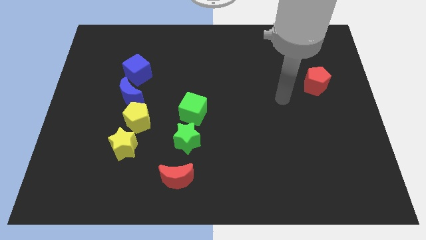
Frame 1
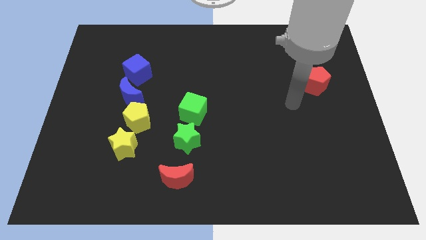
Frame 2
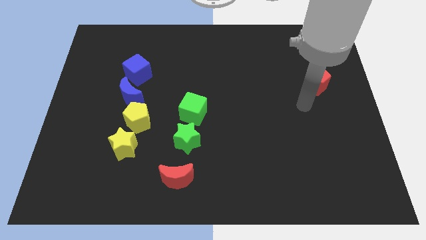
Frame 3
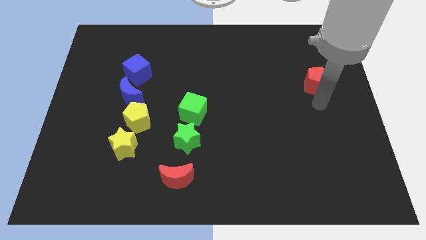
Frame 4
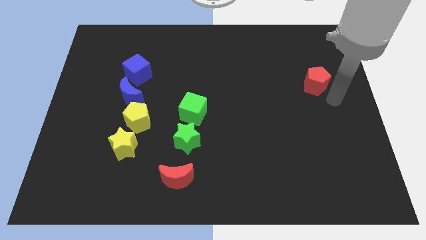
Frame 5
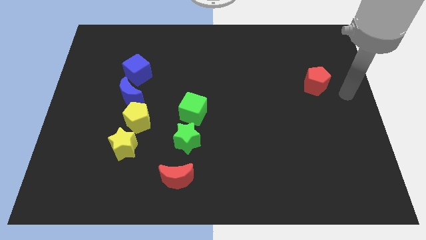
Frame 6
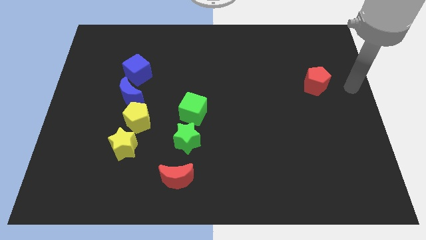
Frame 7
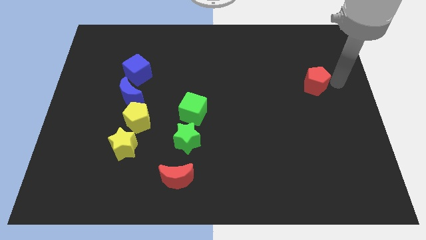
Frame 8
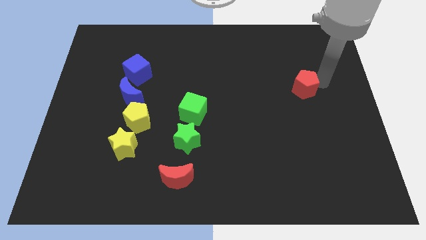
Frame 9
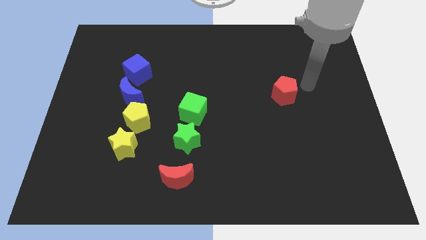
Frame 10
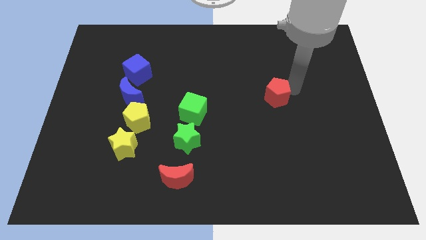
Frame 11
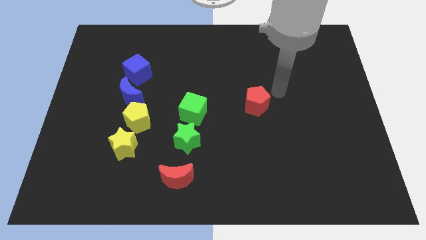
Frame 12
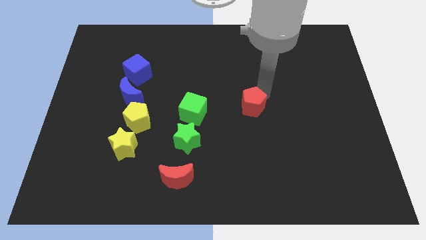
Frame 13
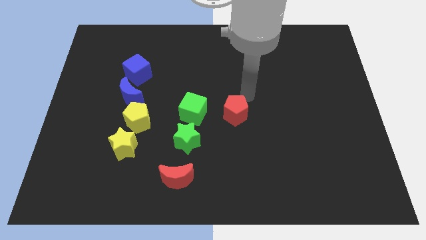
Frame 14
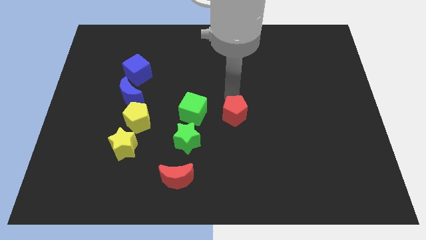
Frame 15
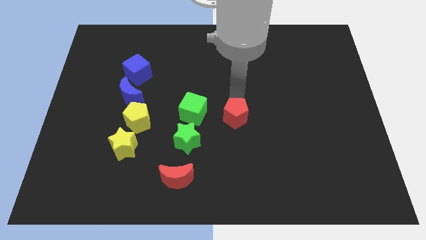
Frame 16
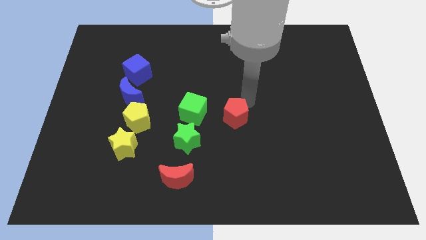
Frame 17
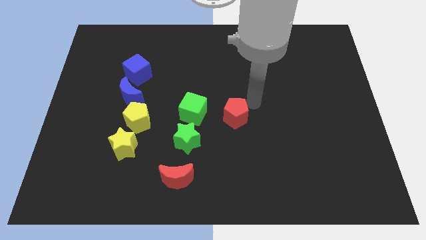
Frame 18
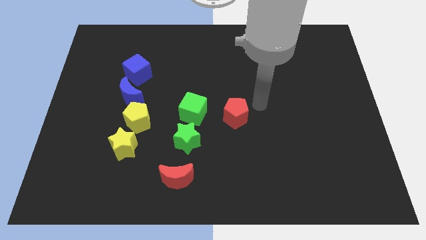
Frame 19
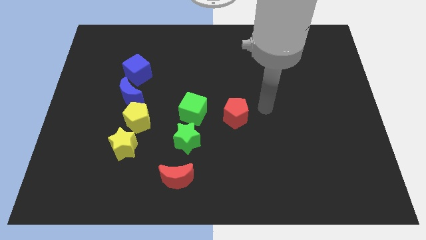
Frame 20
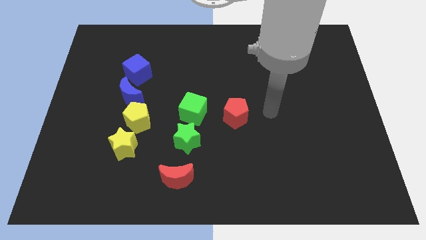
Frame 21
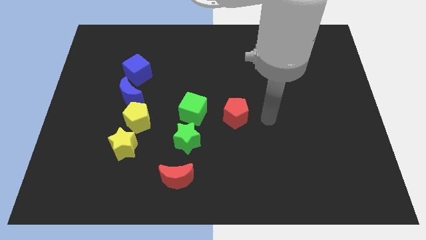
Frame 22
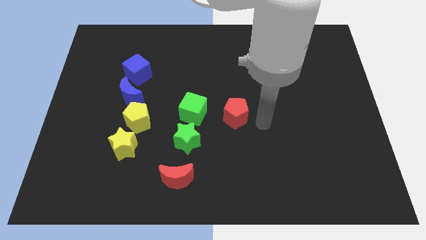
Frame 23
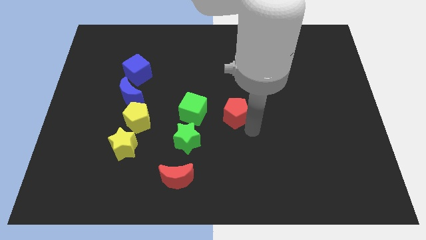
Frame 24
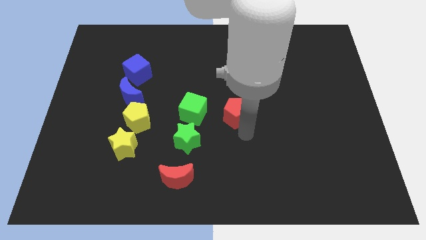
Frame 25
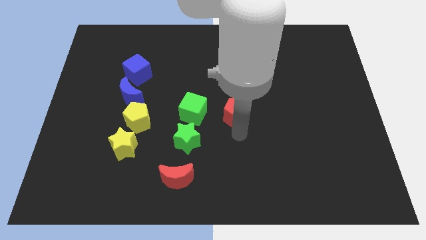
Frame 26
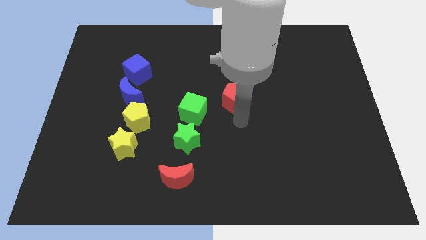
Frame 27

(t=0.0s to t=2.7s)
slide the red pentagon towards the green cube

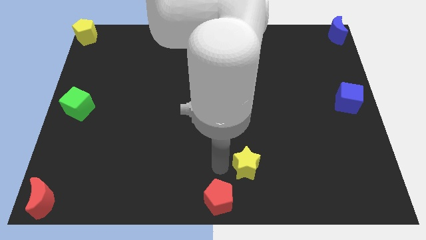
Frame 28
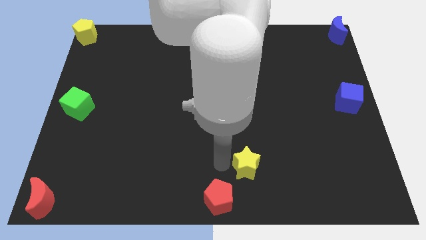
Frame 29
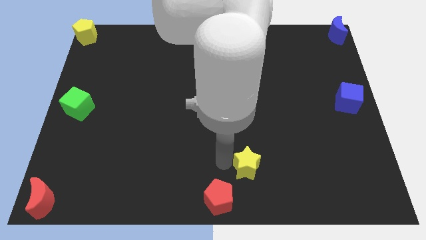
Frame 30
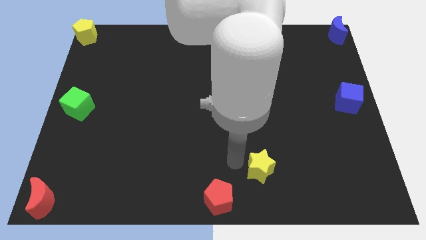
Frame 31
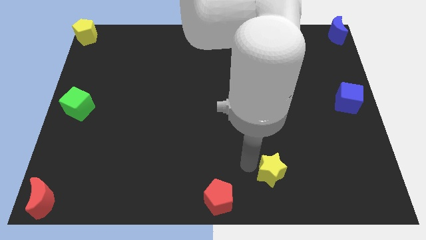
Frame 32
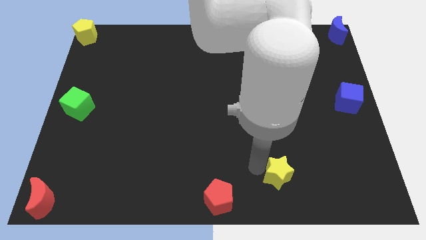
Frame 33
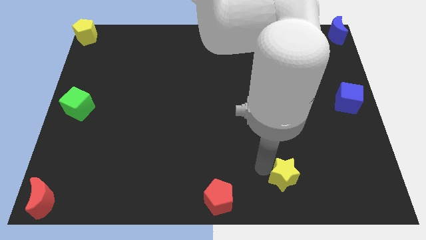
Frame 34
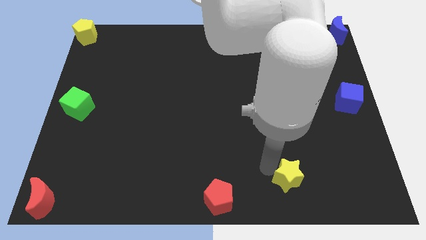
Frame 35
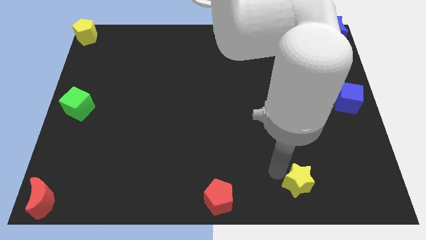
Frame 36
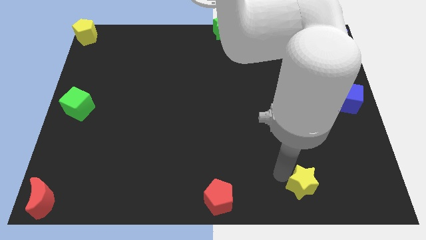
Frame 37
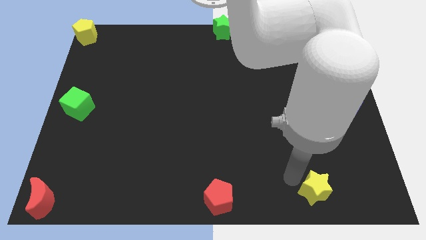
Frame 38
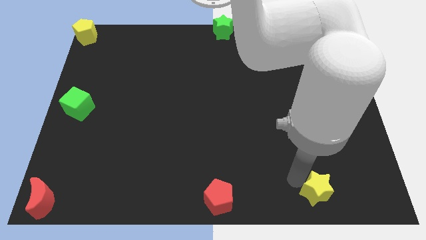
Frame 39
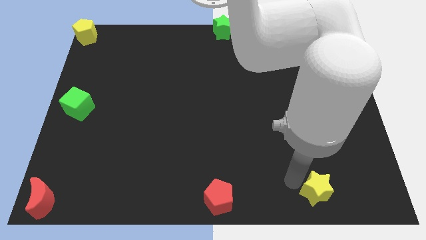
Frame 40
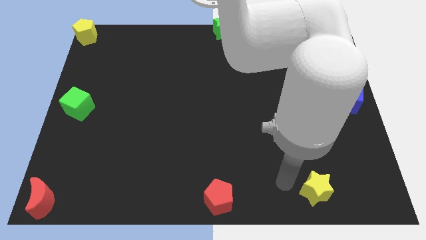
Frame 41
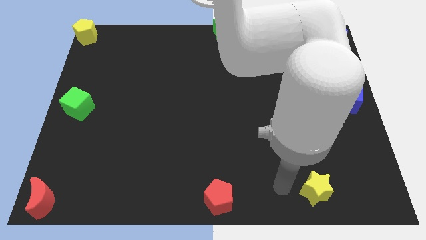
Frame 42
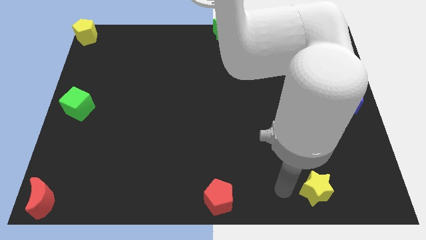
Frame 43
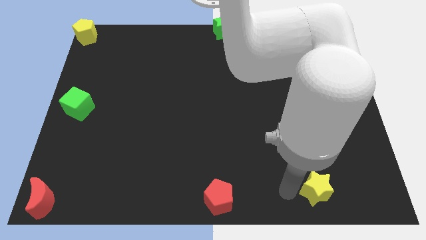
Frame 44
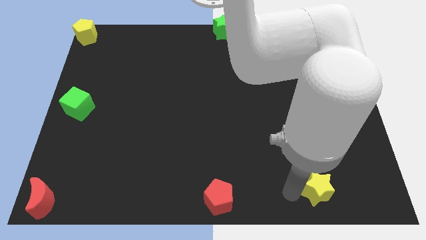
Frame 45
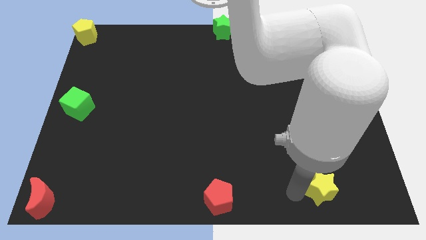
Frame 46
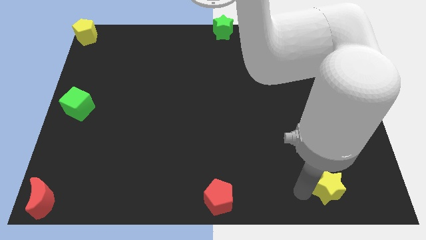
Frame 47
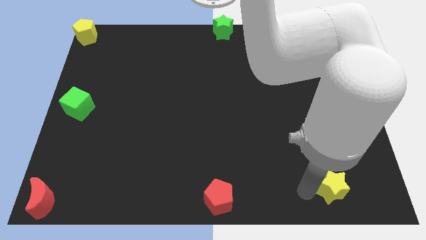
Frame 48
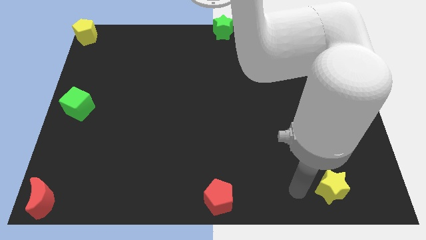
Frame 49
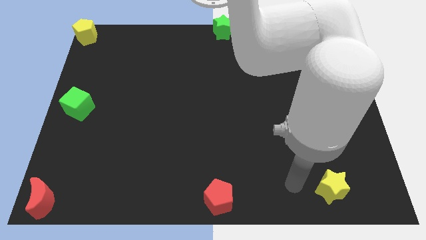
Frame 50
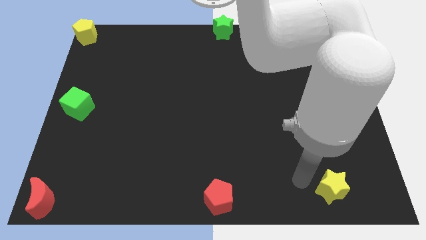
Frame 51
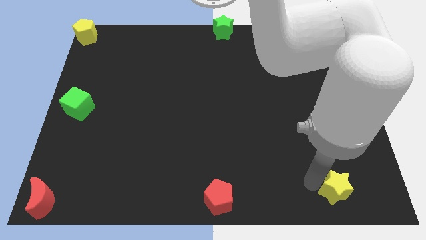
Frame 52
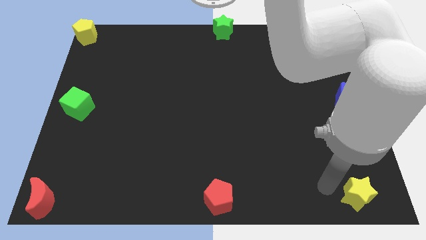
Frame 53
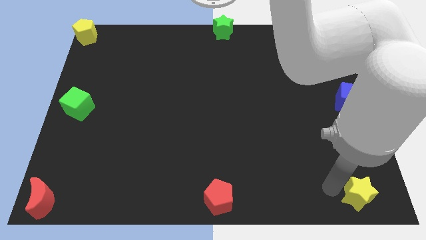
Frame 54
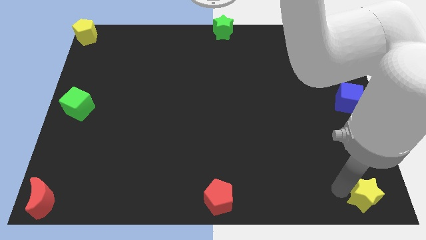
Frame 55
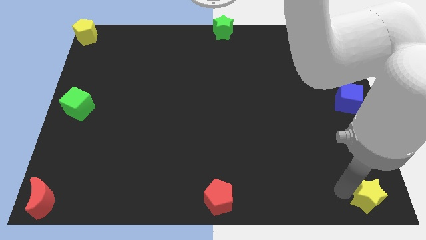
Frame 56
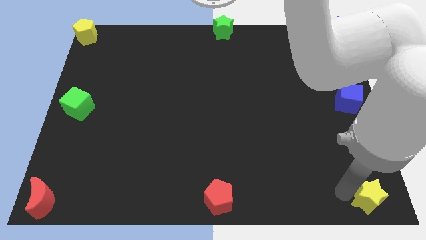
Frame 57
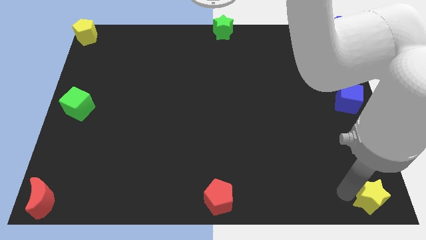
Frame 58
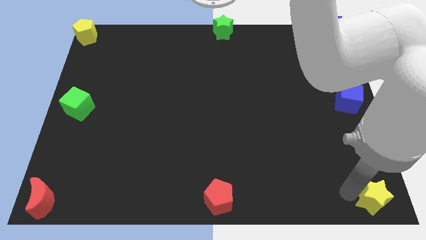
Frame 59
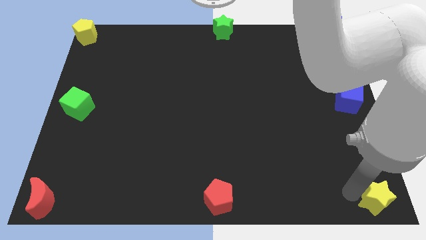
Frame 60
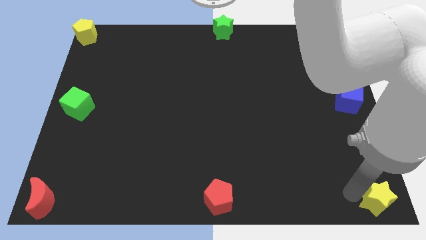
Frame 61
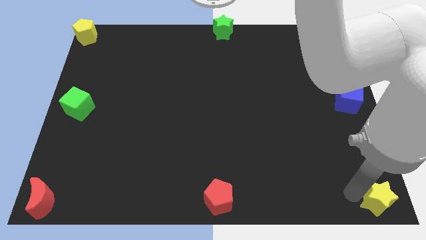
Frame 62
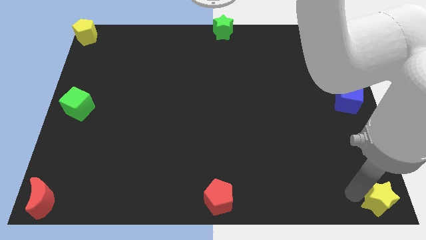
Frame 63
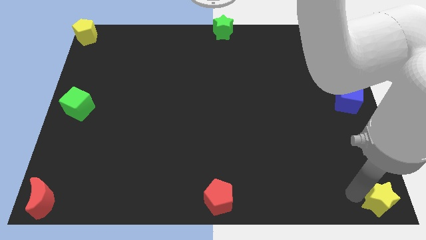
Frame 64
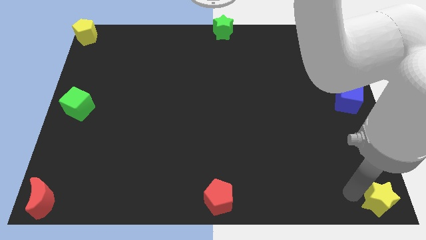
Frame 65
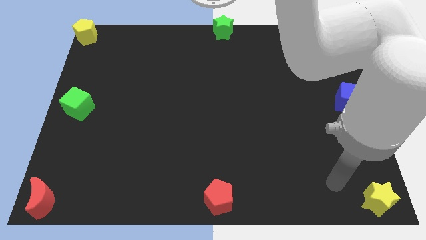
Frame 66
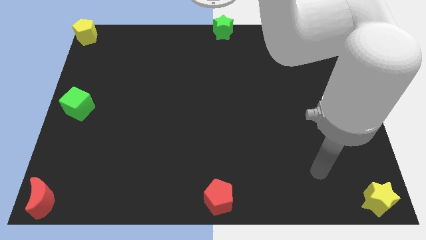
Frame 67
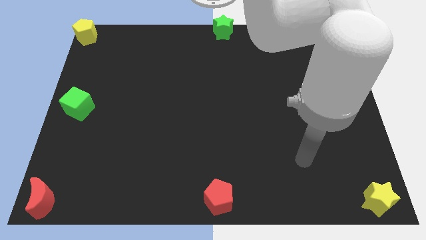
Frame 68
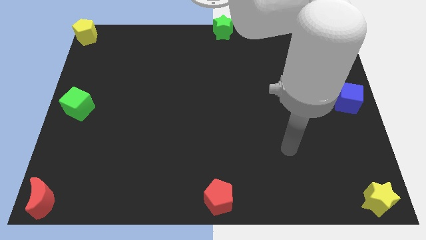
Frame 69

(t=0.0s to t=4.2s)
place yellow star to the bottom right corner of the board

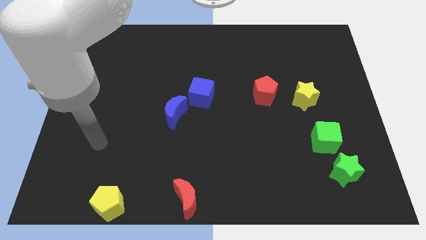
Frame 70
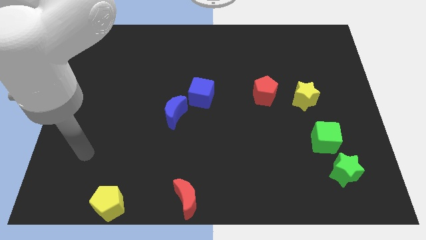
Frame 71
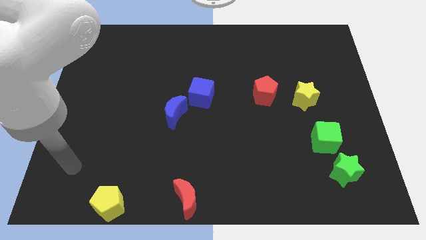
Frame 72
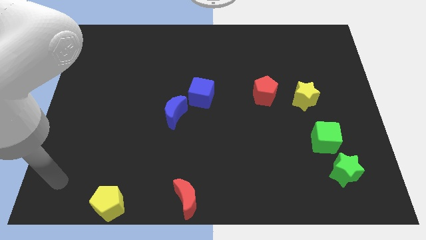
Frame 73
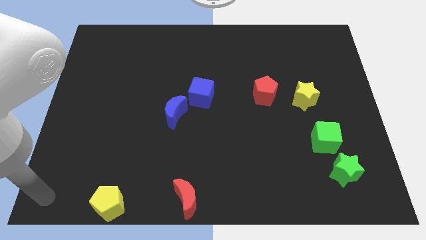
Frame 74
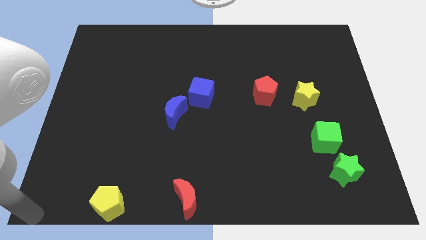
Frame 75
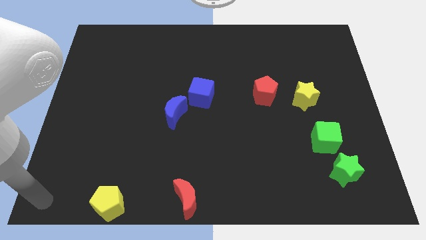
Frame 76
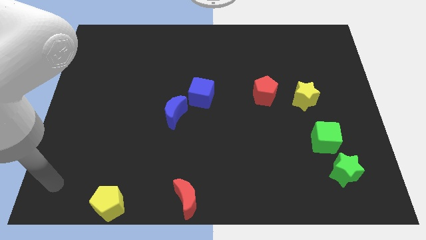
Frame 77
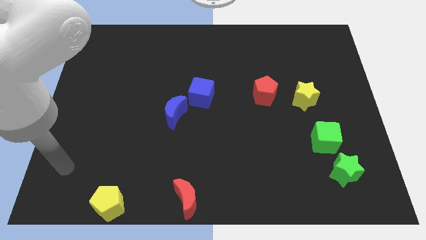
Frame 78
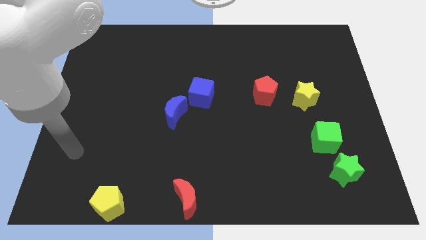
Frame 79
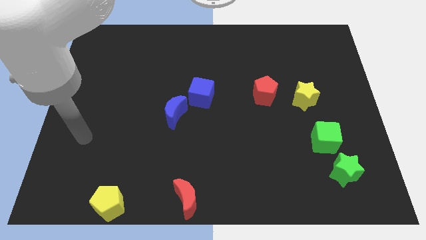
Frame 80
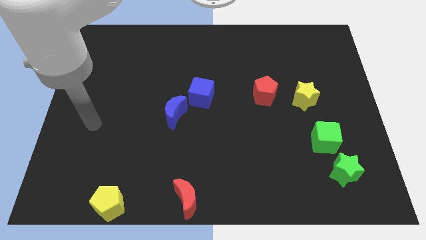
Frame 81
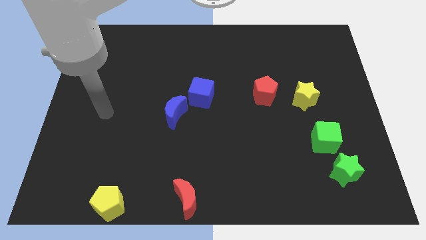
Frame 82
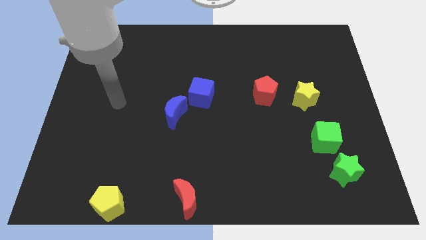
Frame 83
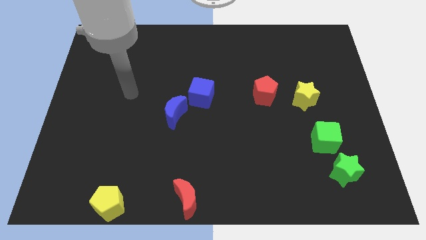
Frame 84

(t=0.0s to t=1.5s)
move your hand towards the top side

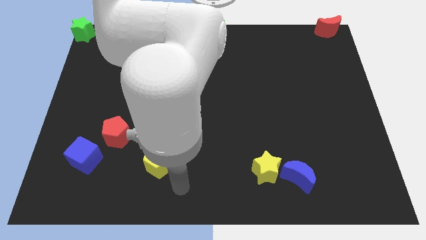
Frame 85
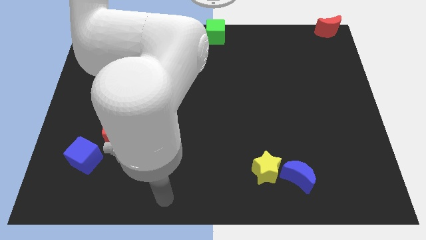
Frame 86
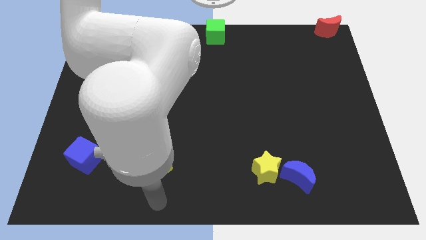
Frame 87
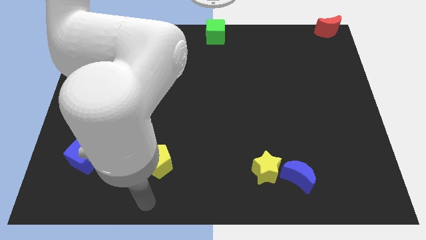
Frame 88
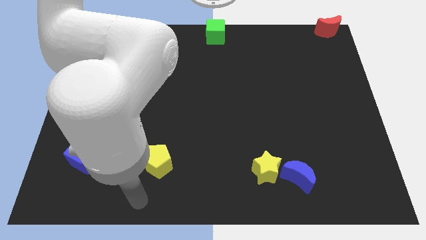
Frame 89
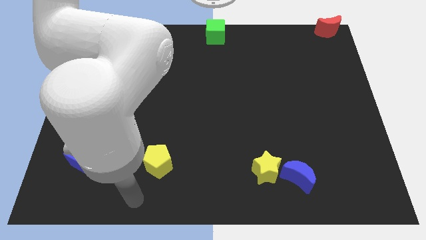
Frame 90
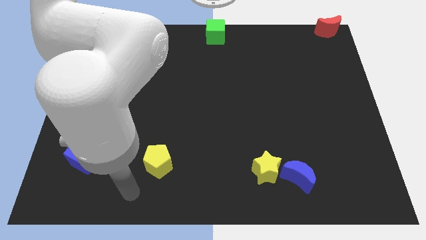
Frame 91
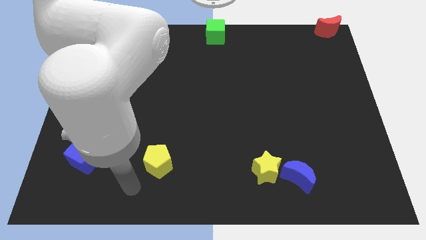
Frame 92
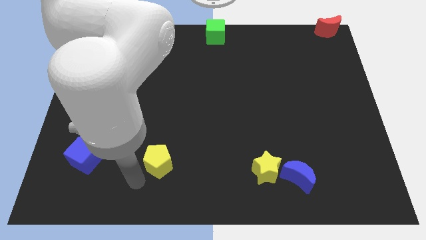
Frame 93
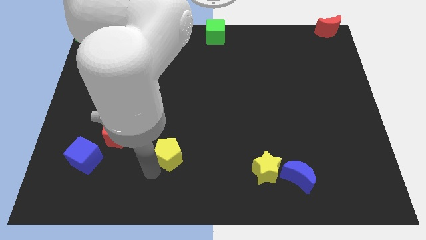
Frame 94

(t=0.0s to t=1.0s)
push yellow pentagon slightly upwards
